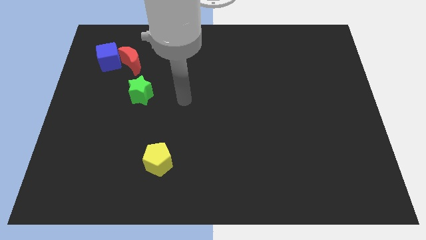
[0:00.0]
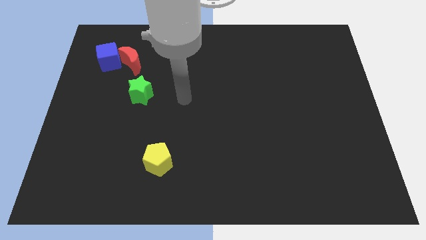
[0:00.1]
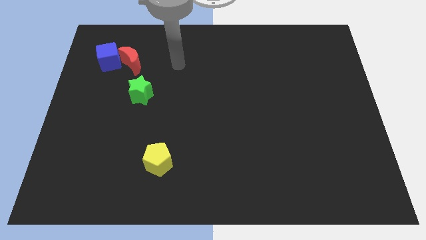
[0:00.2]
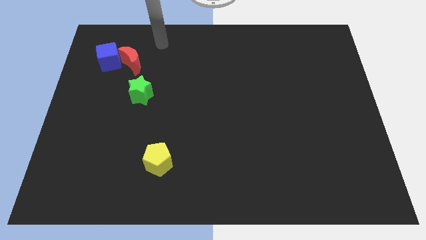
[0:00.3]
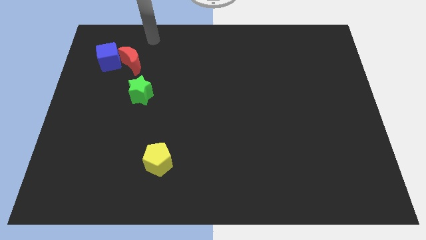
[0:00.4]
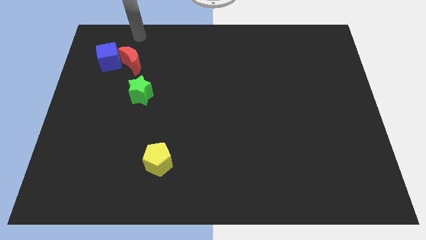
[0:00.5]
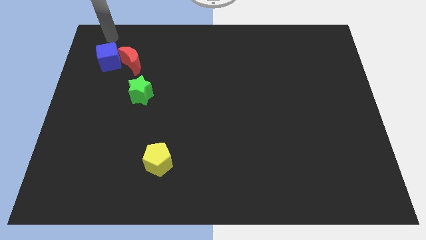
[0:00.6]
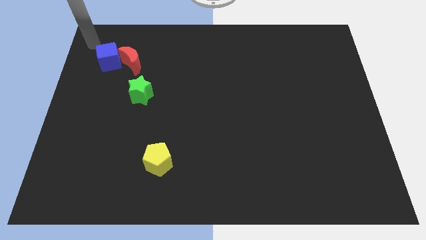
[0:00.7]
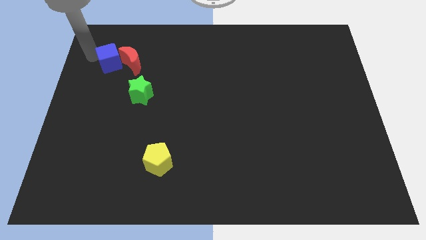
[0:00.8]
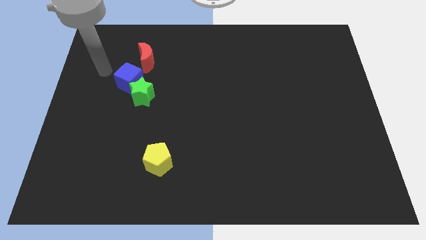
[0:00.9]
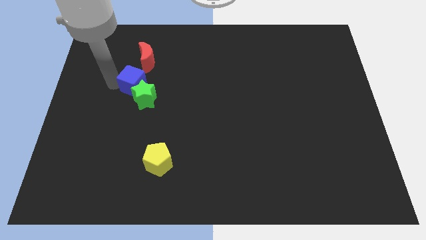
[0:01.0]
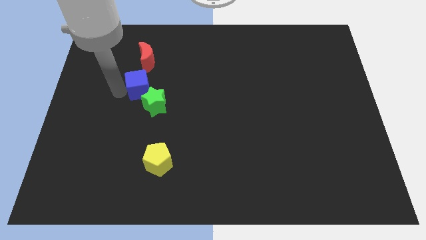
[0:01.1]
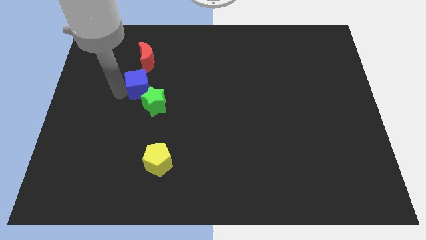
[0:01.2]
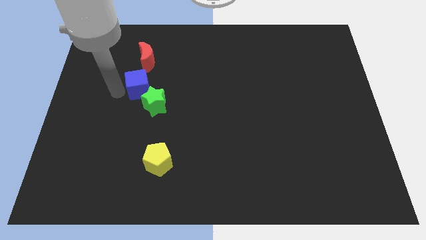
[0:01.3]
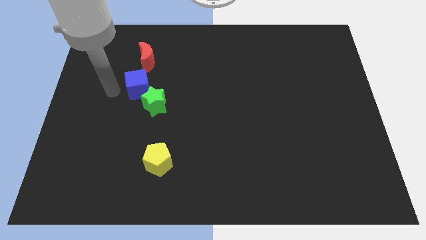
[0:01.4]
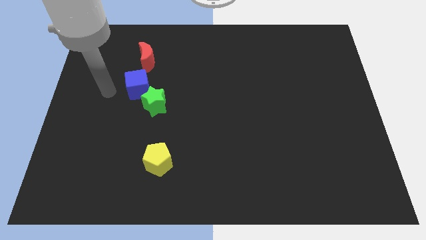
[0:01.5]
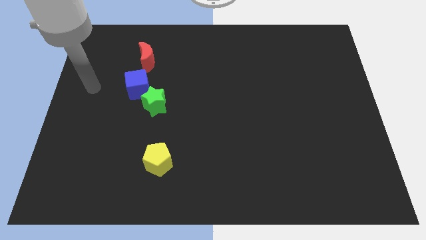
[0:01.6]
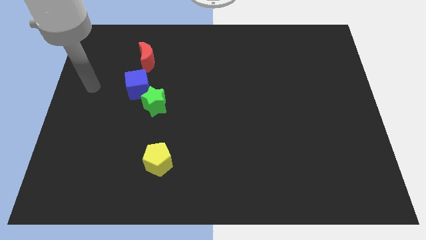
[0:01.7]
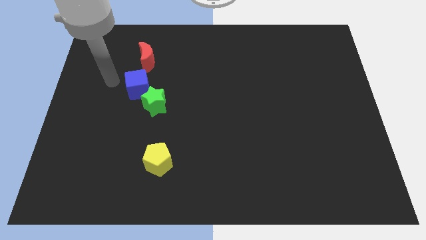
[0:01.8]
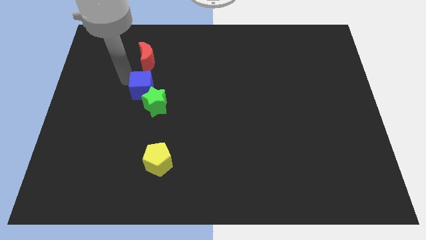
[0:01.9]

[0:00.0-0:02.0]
move the blue block to the star

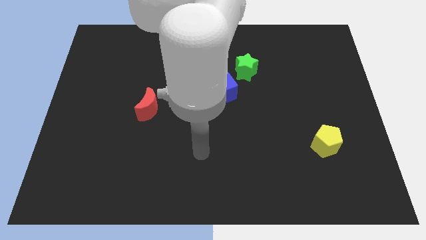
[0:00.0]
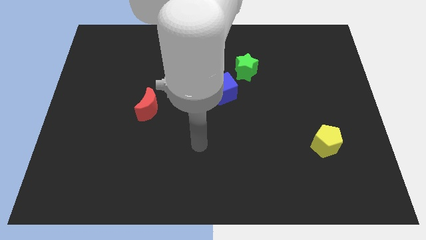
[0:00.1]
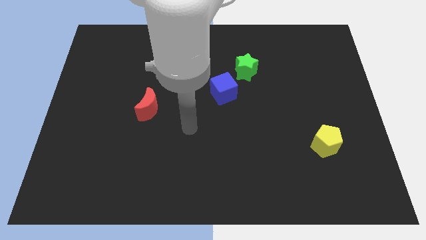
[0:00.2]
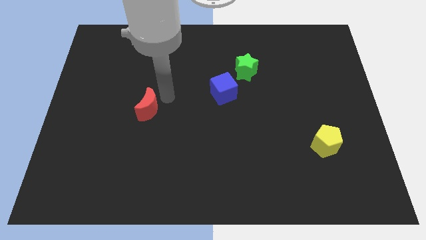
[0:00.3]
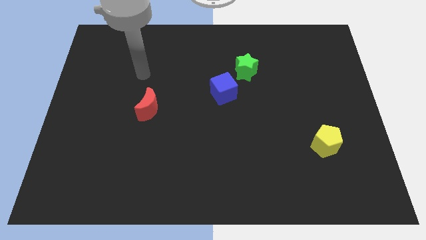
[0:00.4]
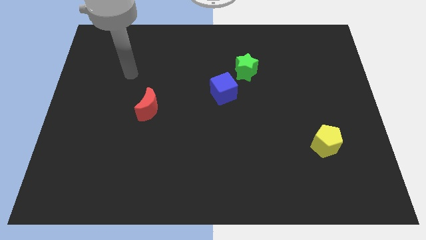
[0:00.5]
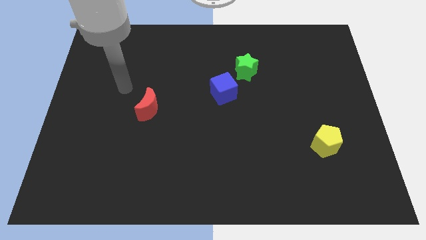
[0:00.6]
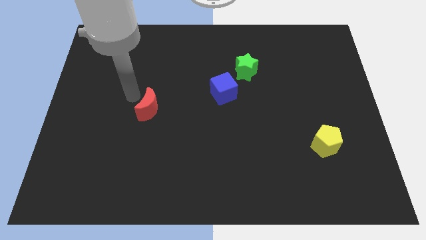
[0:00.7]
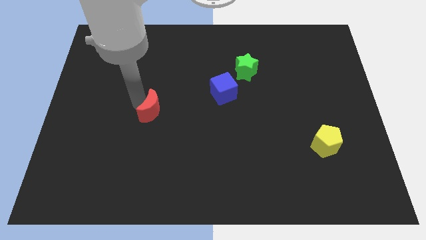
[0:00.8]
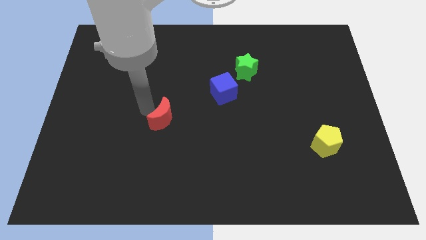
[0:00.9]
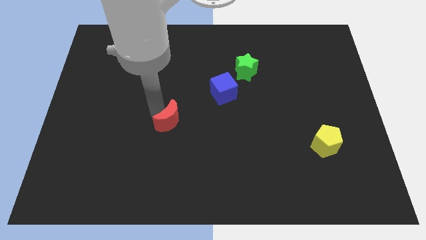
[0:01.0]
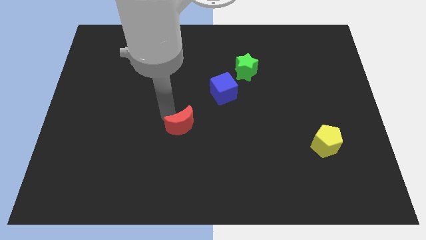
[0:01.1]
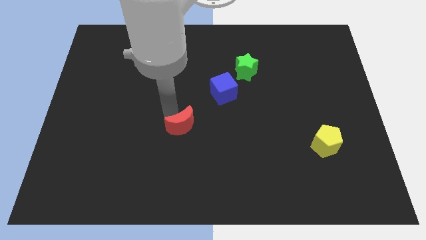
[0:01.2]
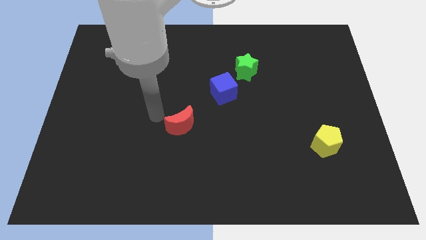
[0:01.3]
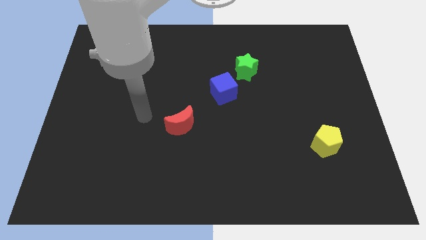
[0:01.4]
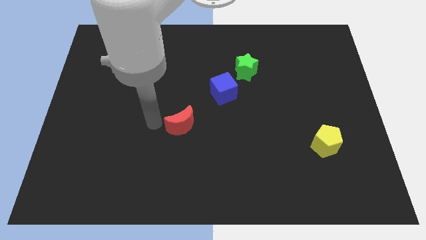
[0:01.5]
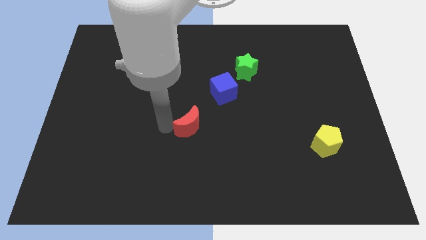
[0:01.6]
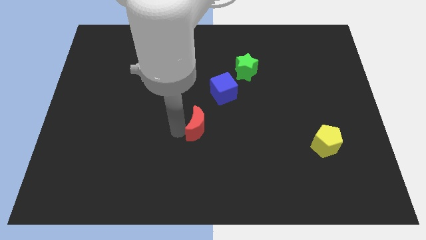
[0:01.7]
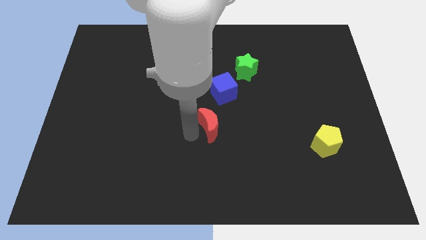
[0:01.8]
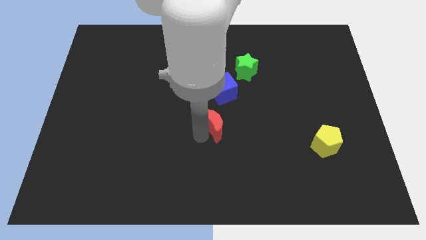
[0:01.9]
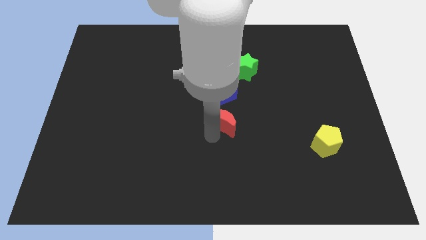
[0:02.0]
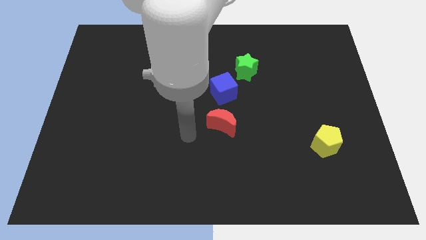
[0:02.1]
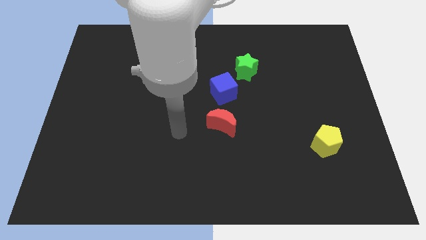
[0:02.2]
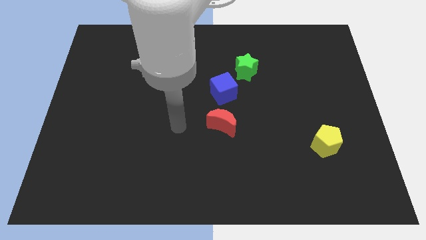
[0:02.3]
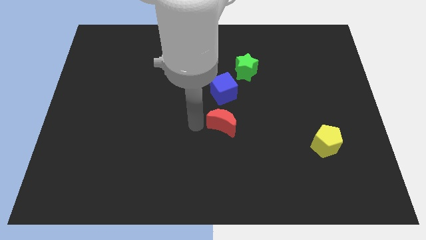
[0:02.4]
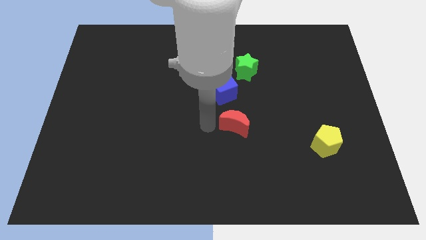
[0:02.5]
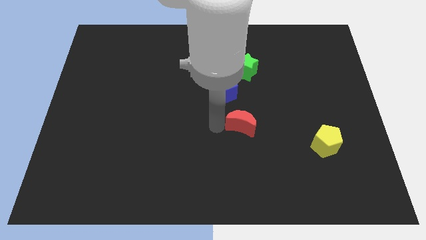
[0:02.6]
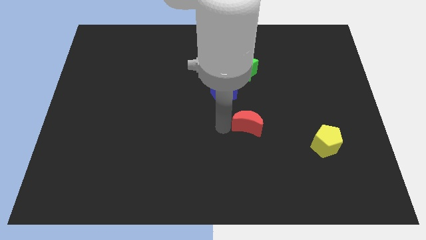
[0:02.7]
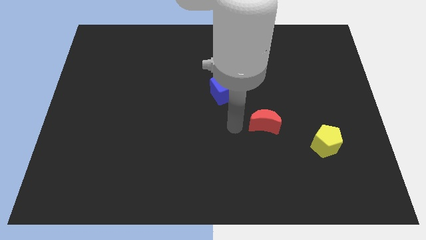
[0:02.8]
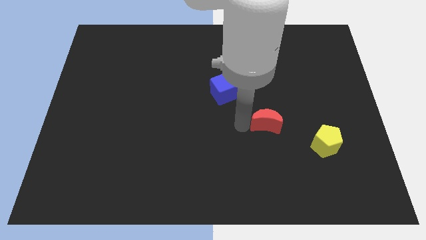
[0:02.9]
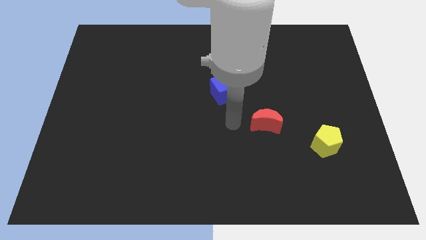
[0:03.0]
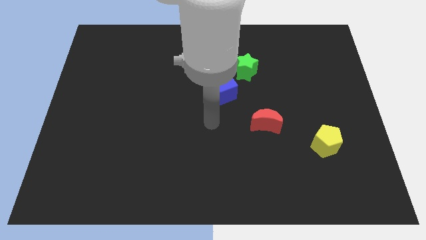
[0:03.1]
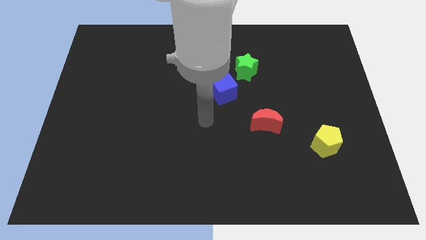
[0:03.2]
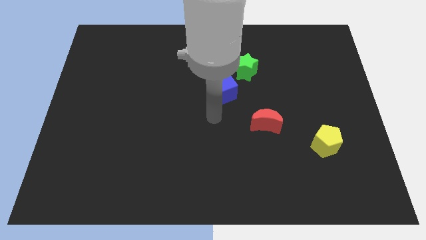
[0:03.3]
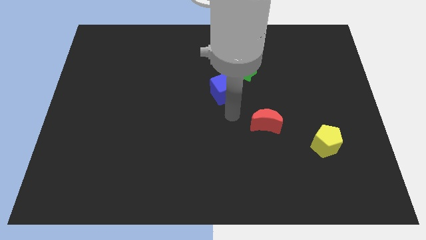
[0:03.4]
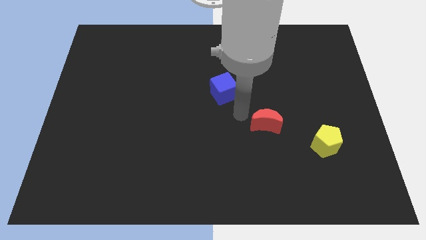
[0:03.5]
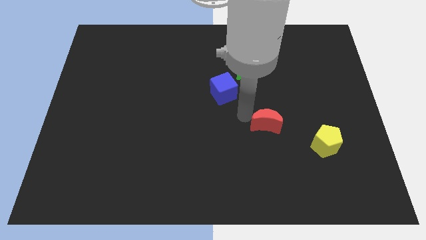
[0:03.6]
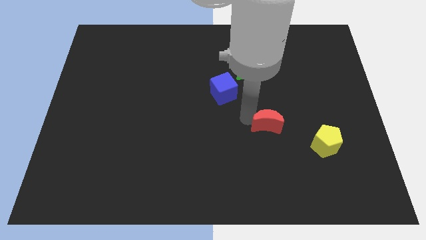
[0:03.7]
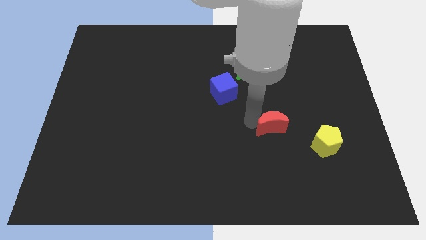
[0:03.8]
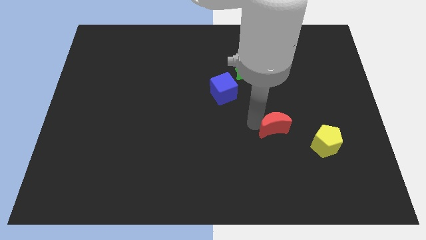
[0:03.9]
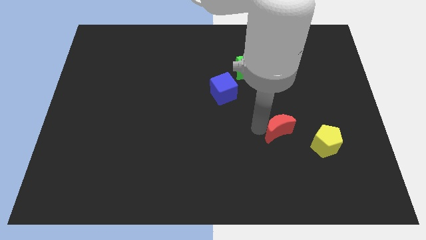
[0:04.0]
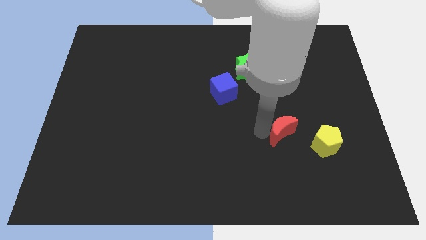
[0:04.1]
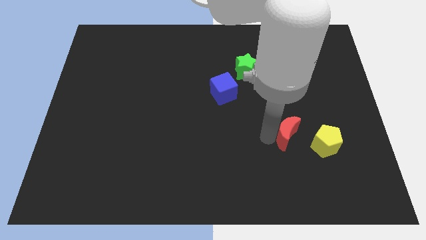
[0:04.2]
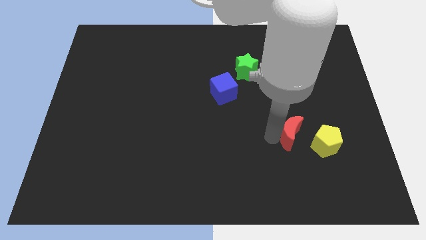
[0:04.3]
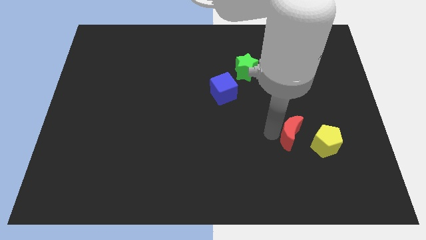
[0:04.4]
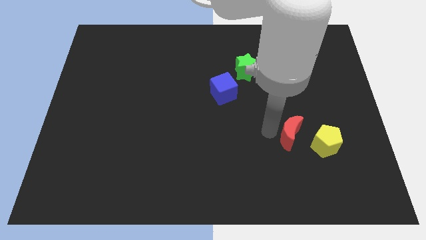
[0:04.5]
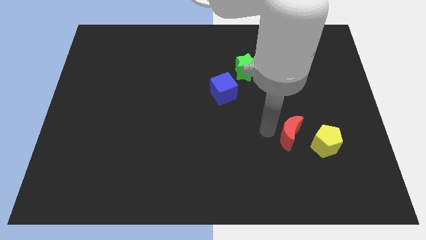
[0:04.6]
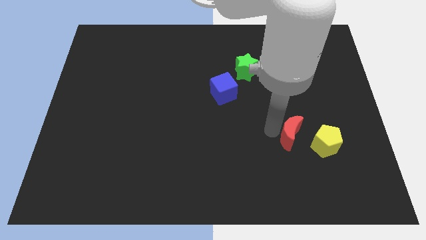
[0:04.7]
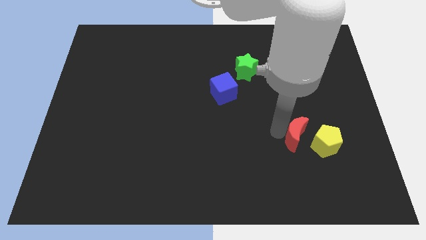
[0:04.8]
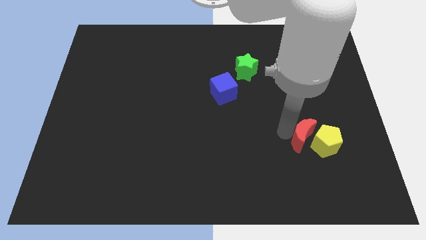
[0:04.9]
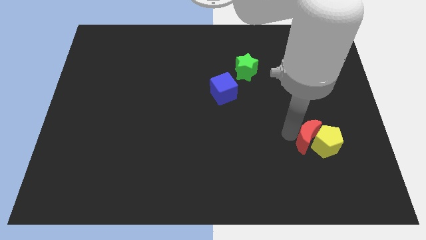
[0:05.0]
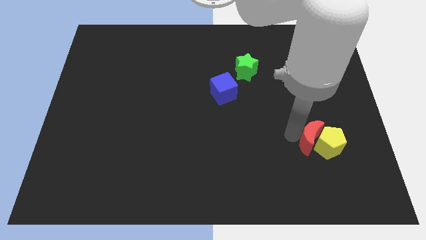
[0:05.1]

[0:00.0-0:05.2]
slide the moon close to the yellow block

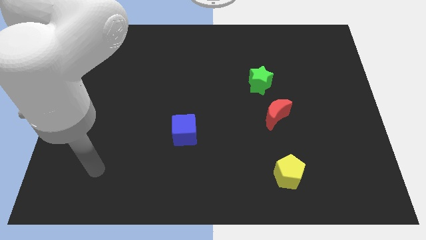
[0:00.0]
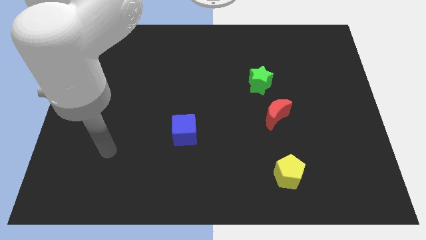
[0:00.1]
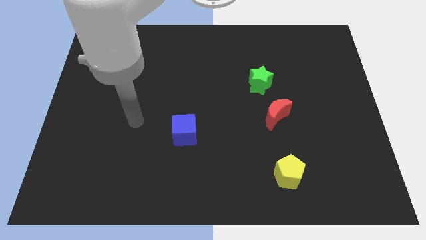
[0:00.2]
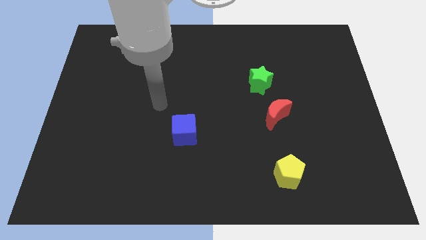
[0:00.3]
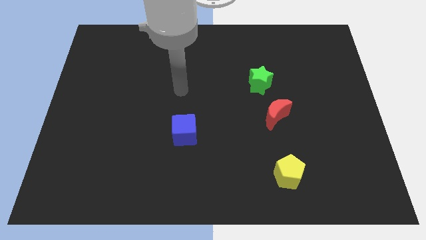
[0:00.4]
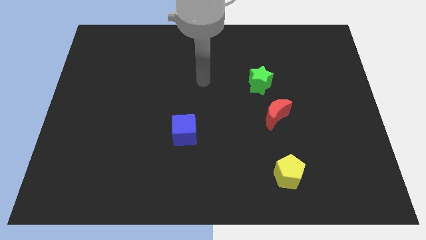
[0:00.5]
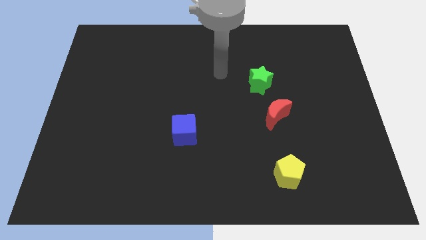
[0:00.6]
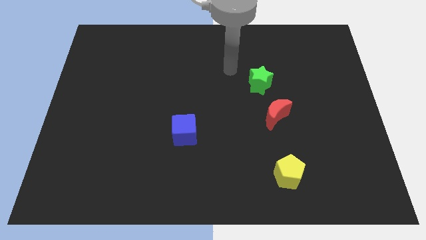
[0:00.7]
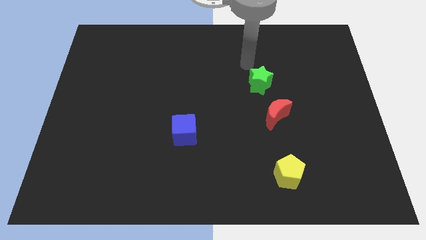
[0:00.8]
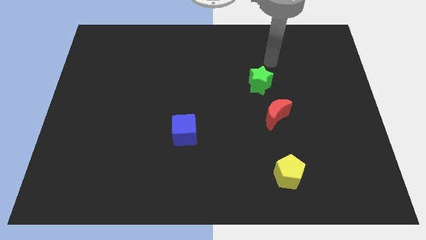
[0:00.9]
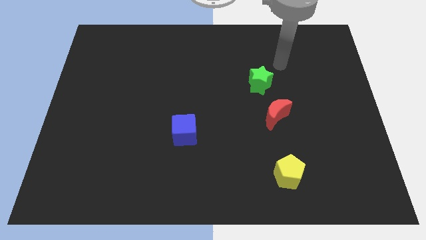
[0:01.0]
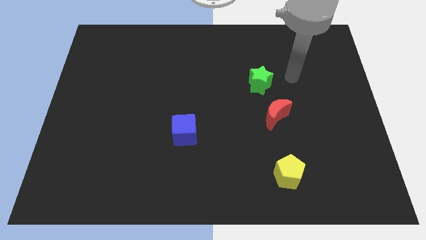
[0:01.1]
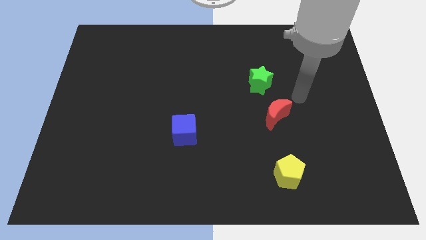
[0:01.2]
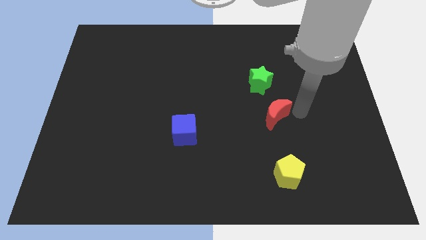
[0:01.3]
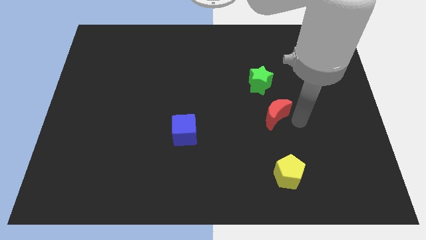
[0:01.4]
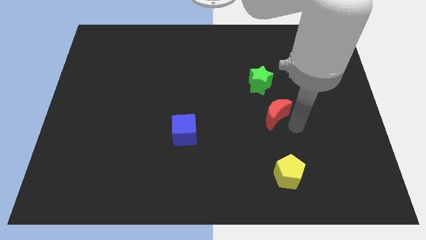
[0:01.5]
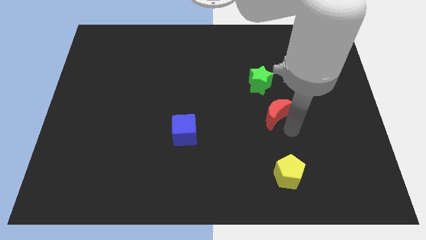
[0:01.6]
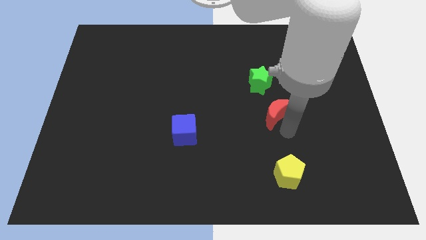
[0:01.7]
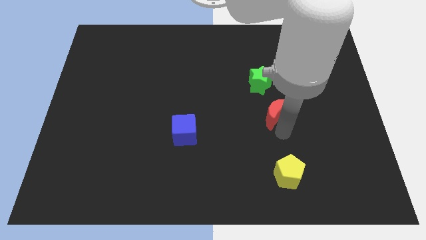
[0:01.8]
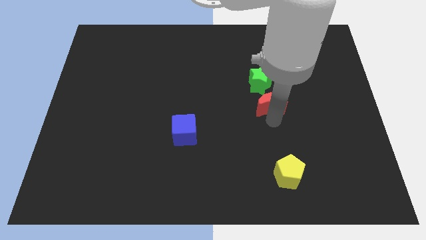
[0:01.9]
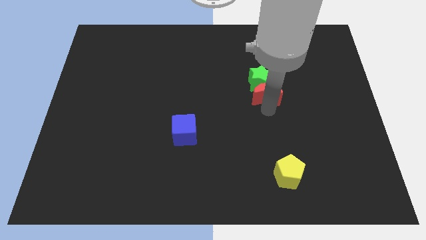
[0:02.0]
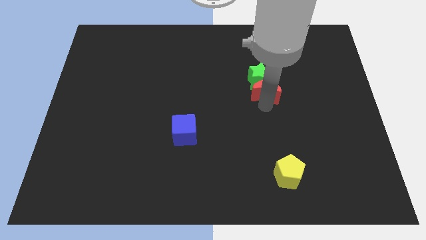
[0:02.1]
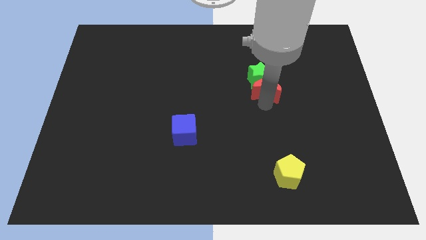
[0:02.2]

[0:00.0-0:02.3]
put the moon to the star
